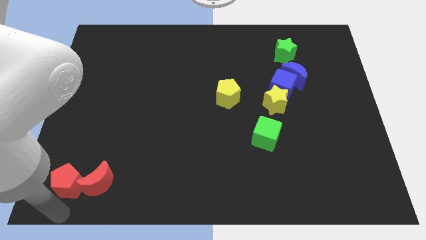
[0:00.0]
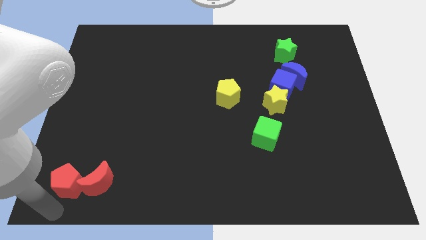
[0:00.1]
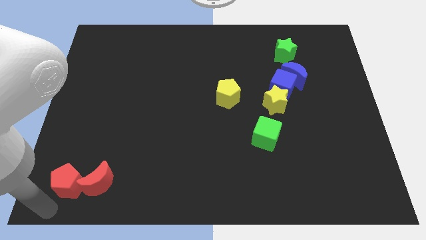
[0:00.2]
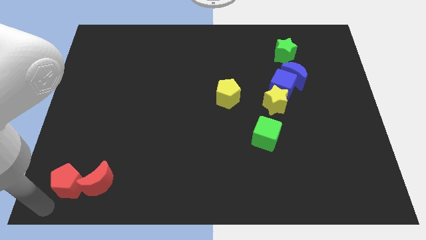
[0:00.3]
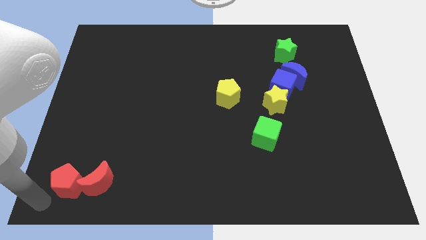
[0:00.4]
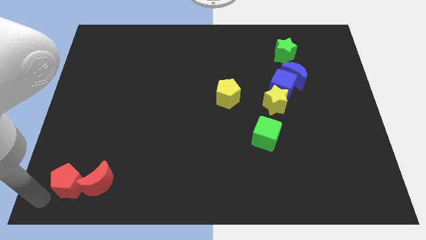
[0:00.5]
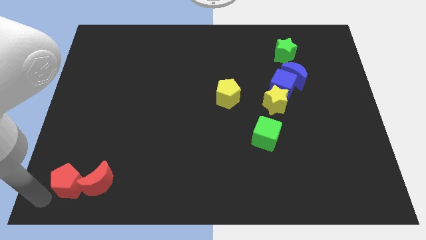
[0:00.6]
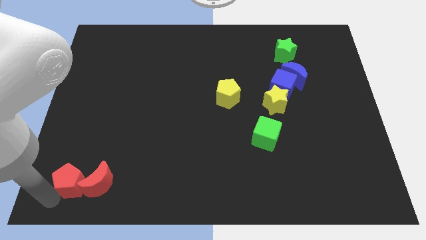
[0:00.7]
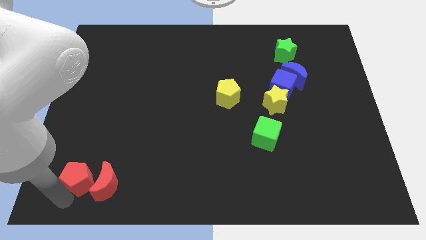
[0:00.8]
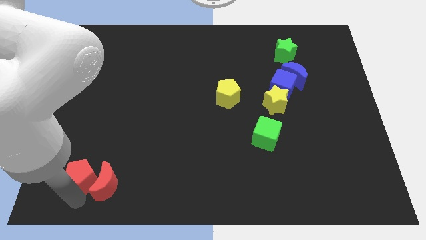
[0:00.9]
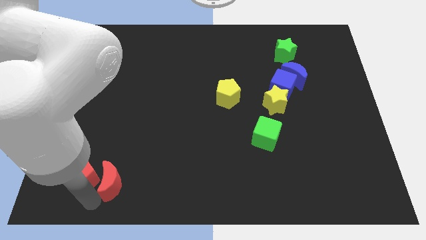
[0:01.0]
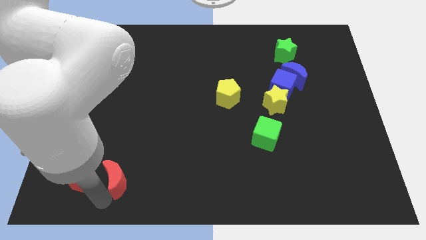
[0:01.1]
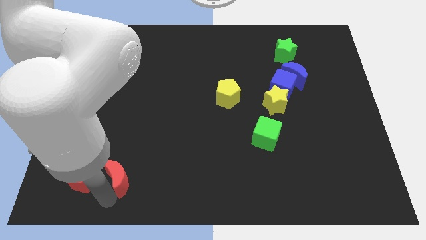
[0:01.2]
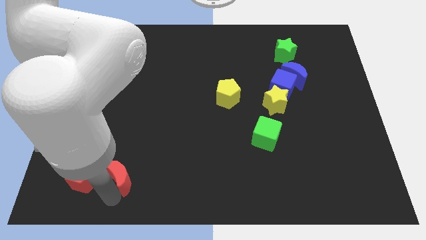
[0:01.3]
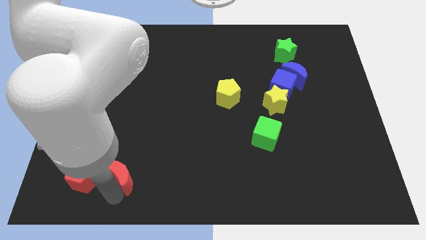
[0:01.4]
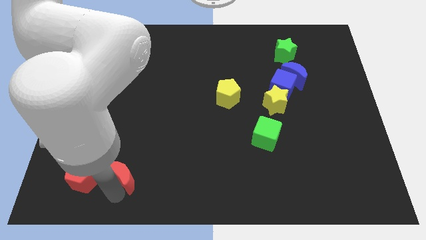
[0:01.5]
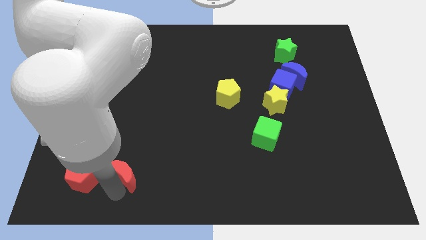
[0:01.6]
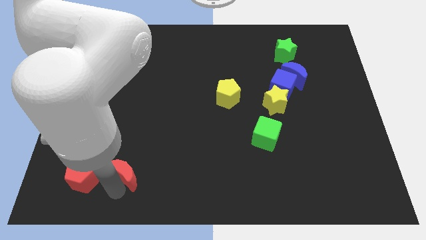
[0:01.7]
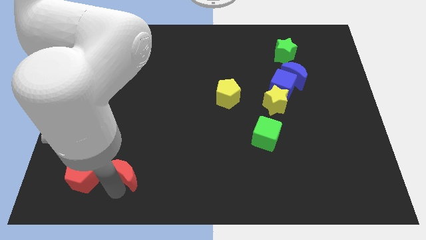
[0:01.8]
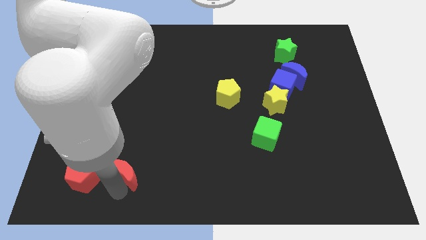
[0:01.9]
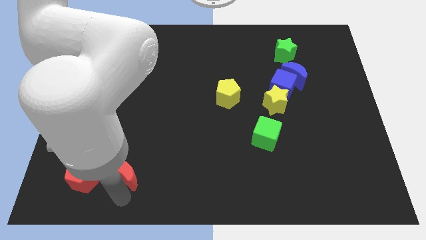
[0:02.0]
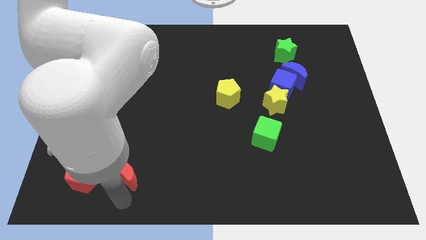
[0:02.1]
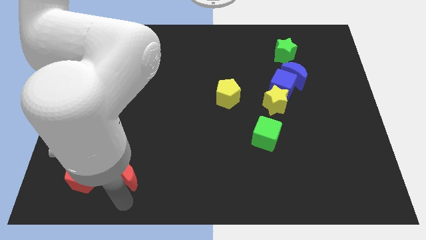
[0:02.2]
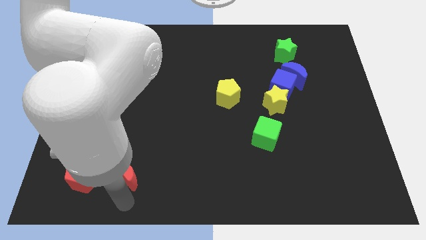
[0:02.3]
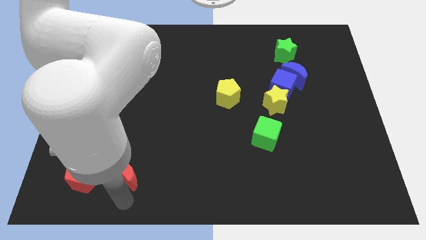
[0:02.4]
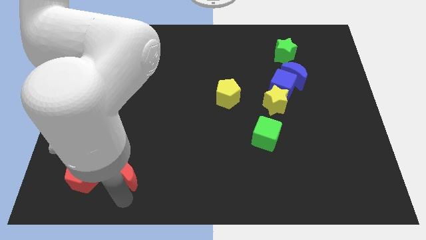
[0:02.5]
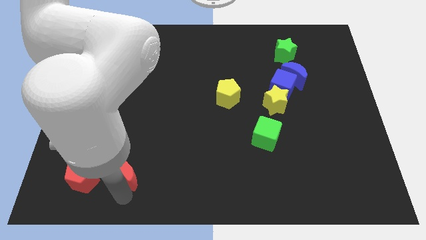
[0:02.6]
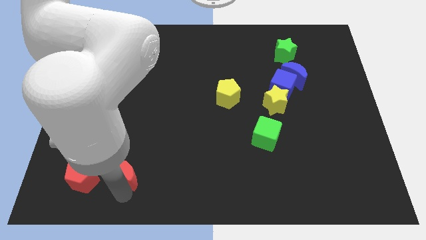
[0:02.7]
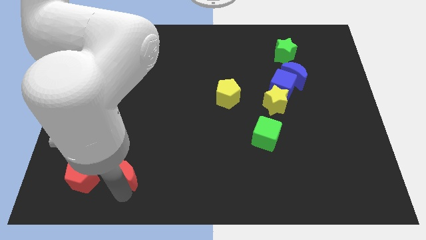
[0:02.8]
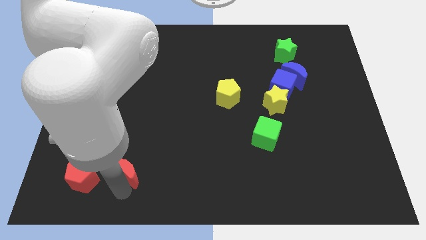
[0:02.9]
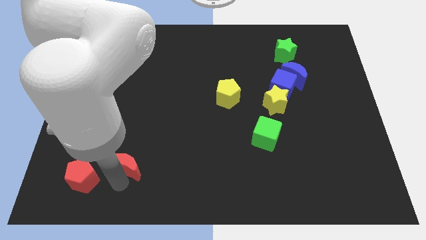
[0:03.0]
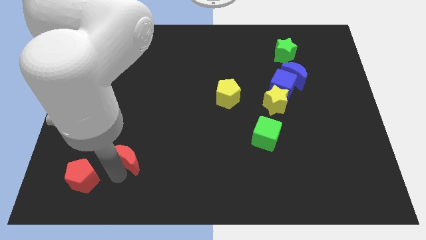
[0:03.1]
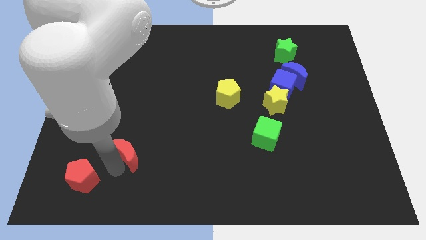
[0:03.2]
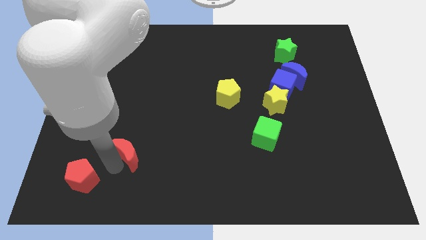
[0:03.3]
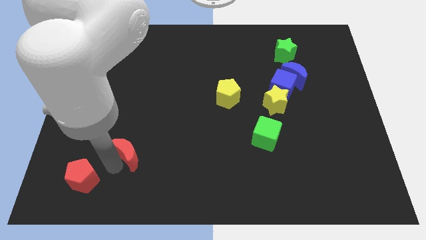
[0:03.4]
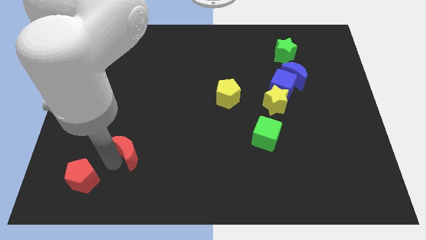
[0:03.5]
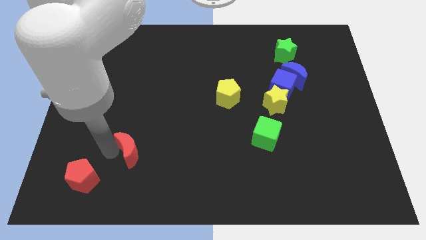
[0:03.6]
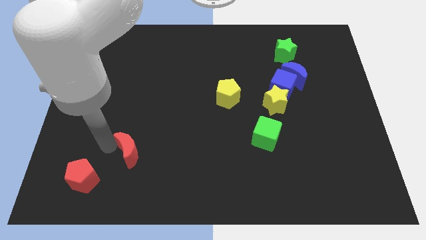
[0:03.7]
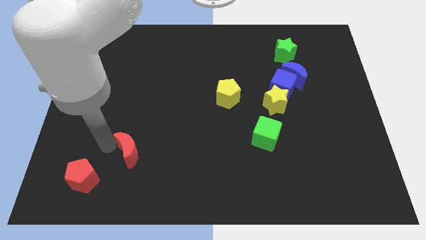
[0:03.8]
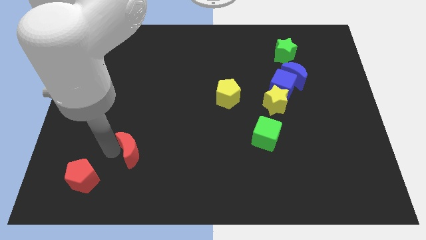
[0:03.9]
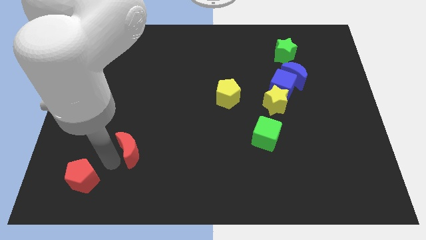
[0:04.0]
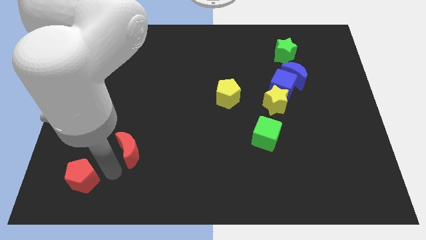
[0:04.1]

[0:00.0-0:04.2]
place the red moon diagonally at top right of the red pentagon

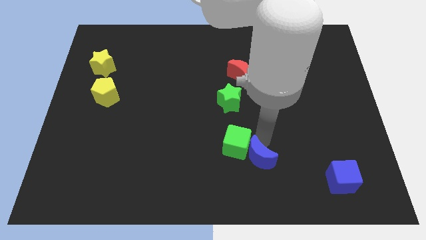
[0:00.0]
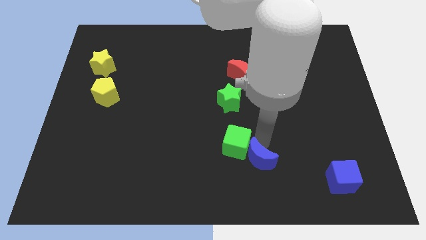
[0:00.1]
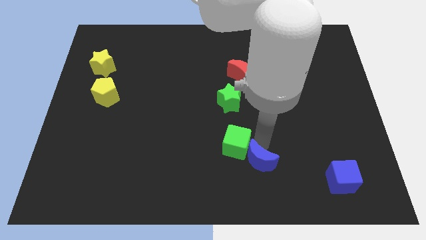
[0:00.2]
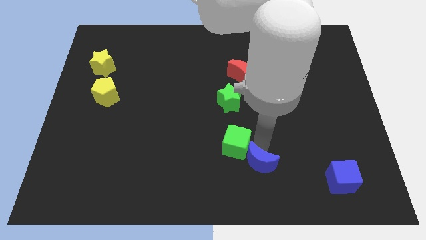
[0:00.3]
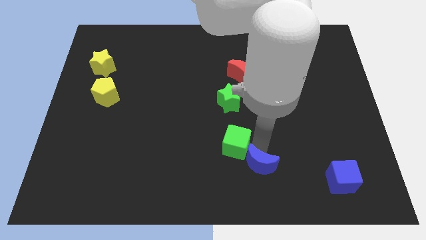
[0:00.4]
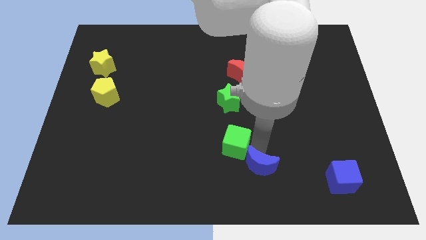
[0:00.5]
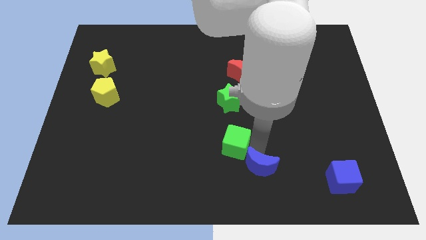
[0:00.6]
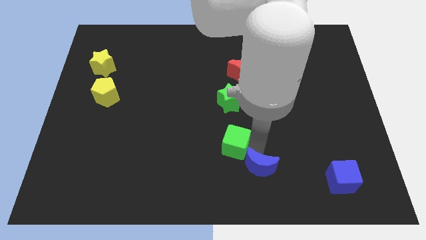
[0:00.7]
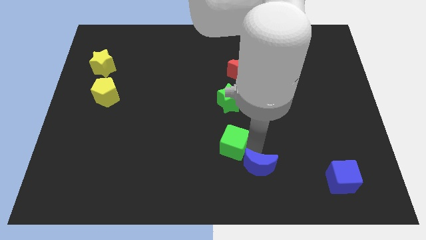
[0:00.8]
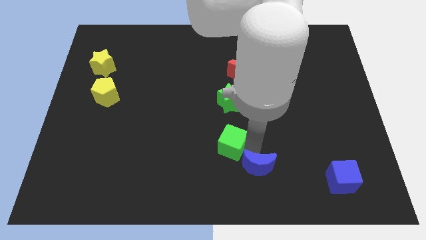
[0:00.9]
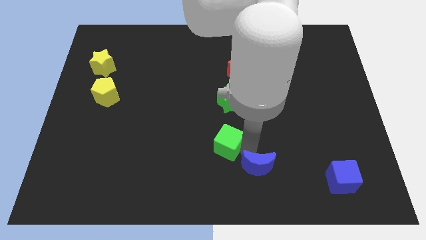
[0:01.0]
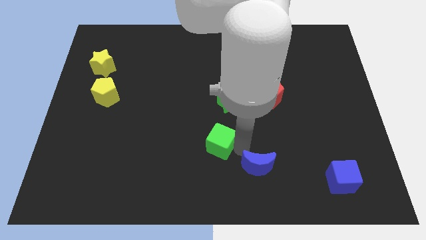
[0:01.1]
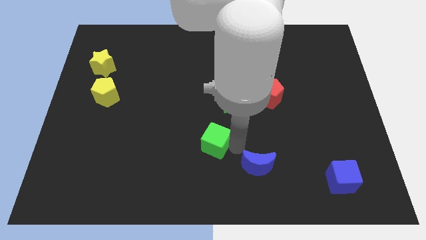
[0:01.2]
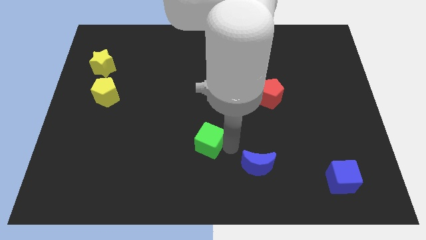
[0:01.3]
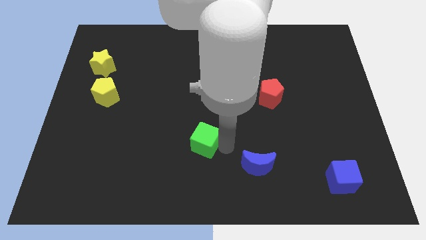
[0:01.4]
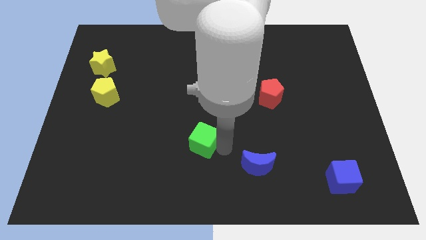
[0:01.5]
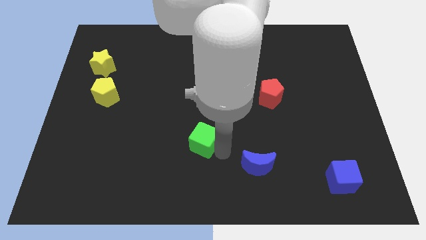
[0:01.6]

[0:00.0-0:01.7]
slide the green cube away from the blue moon

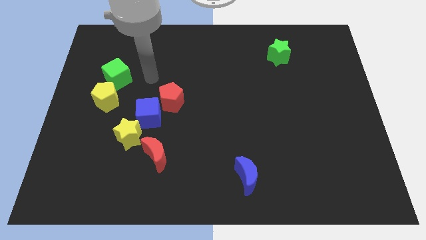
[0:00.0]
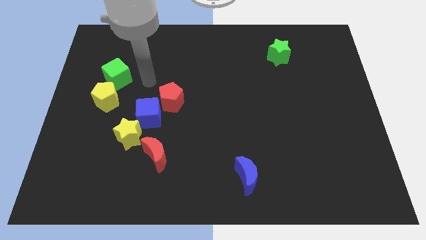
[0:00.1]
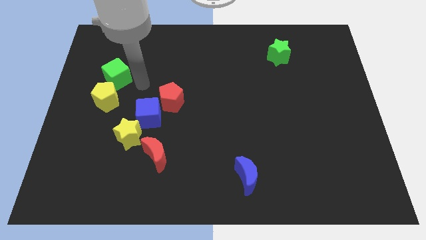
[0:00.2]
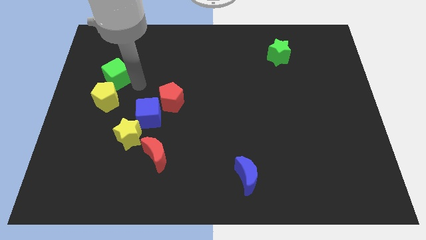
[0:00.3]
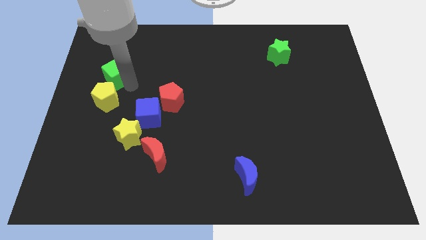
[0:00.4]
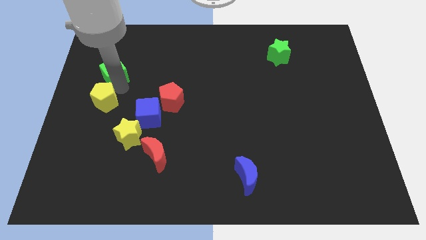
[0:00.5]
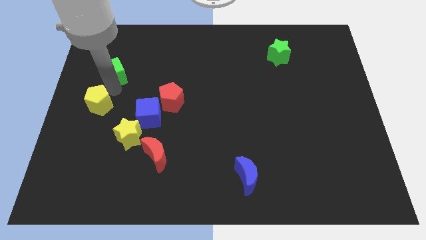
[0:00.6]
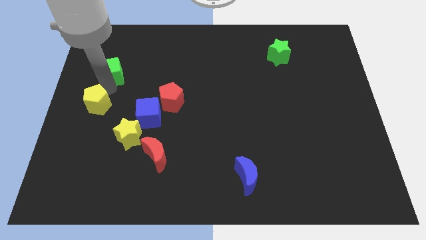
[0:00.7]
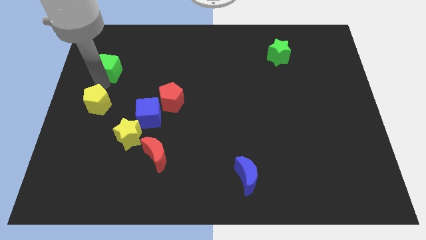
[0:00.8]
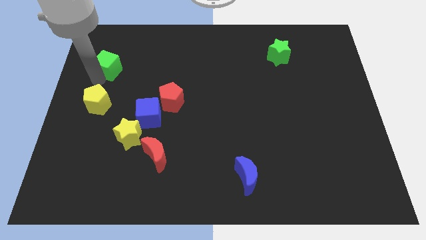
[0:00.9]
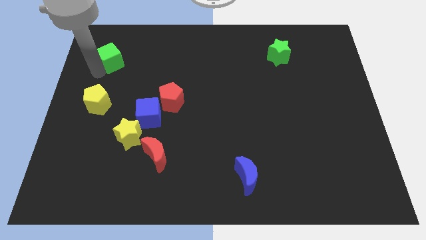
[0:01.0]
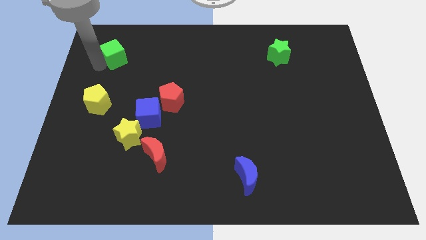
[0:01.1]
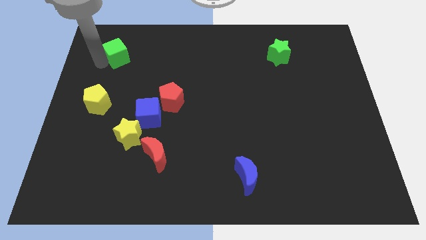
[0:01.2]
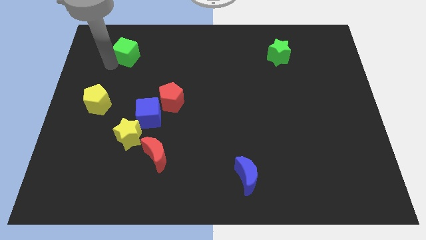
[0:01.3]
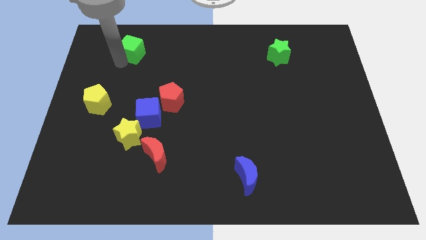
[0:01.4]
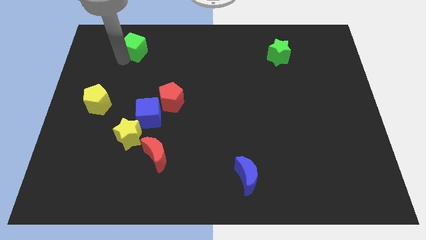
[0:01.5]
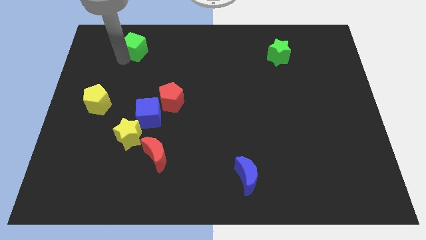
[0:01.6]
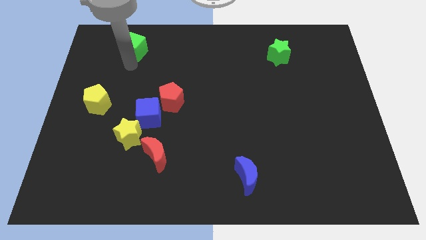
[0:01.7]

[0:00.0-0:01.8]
separate the green cube and yellow pentagon

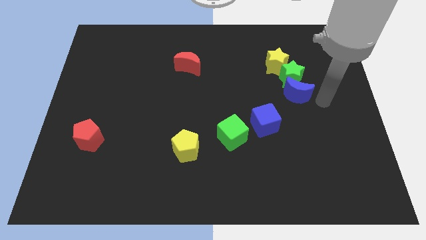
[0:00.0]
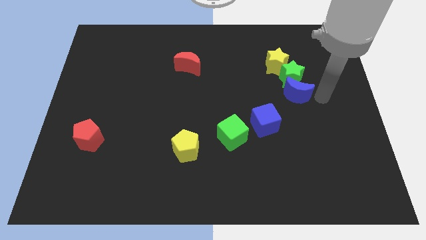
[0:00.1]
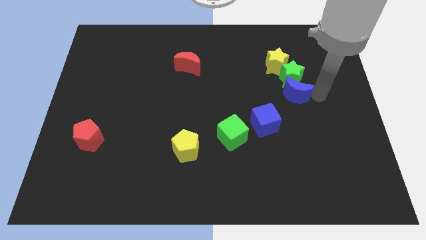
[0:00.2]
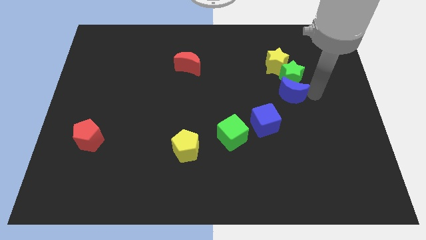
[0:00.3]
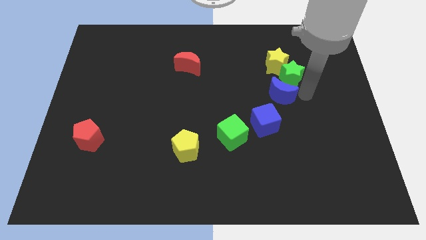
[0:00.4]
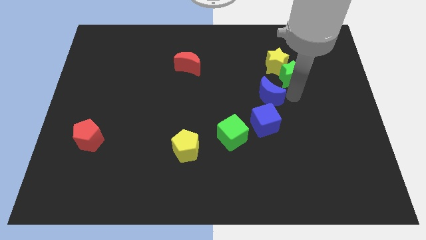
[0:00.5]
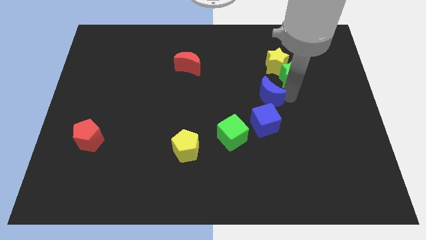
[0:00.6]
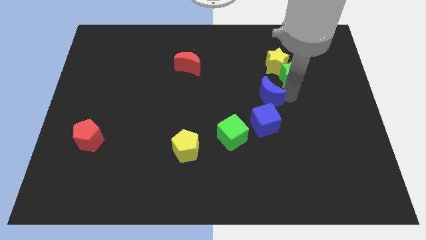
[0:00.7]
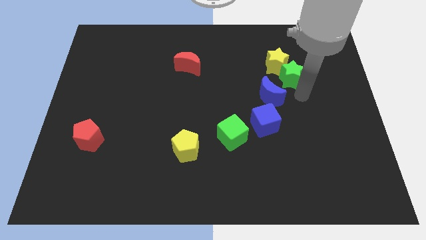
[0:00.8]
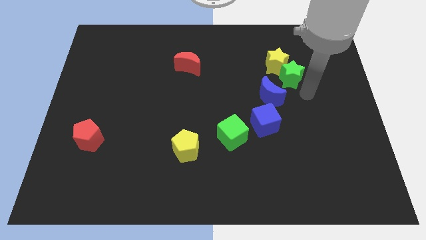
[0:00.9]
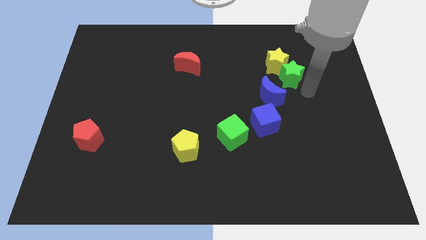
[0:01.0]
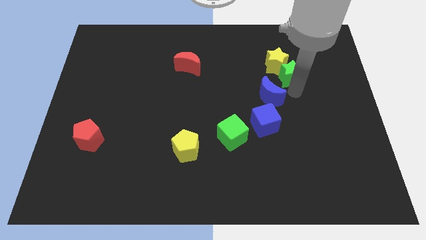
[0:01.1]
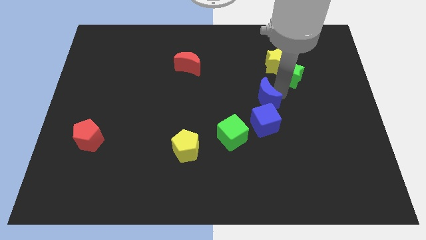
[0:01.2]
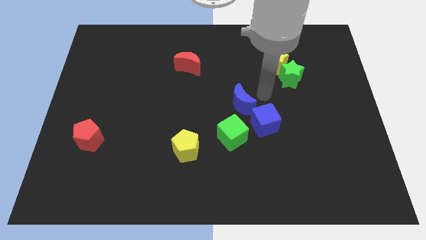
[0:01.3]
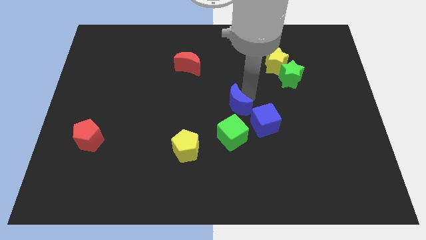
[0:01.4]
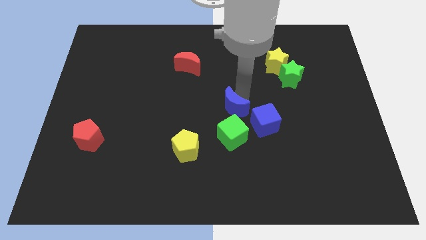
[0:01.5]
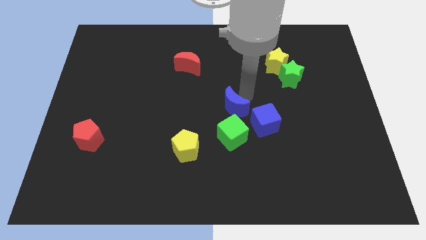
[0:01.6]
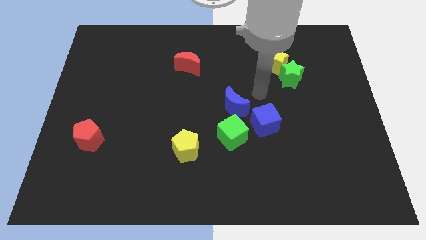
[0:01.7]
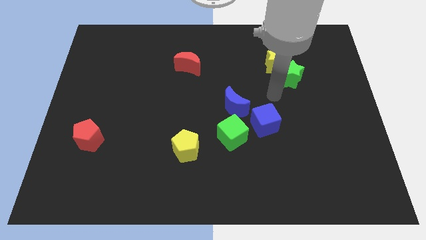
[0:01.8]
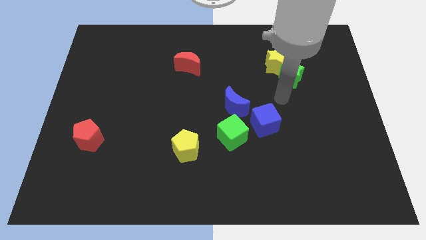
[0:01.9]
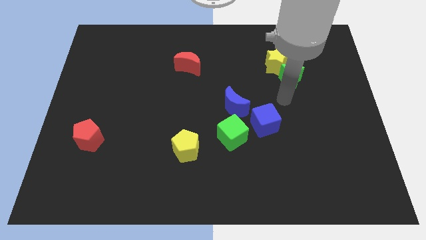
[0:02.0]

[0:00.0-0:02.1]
place blue crescent above green cube
